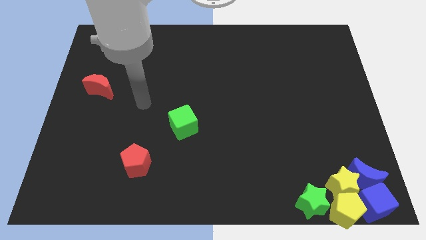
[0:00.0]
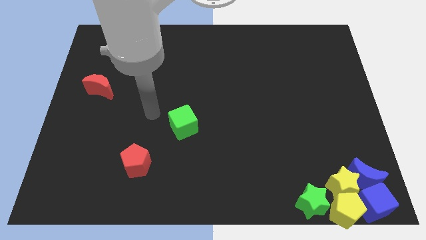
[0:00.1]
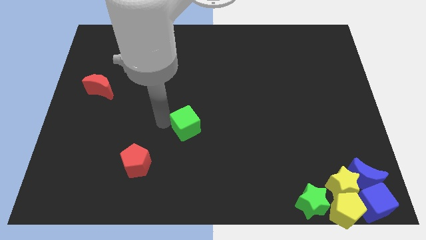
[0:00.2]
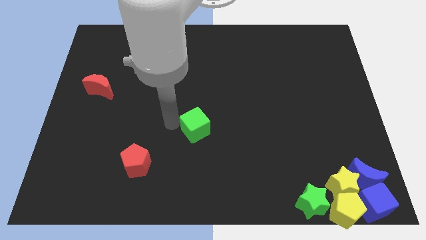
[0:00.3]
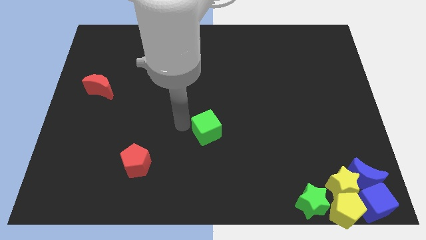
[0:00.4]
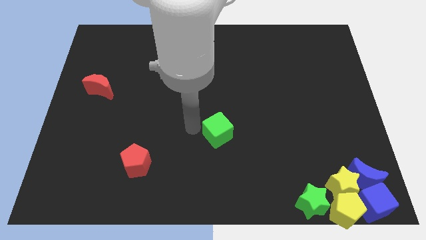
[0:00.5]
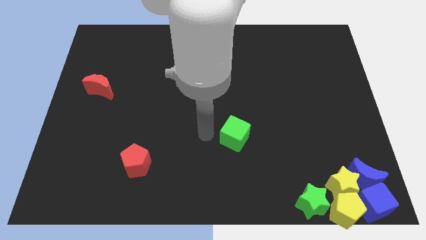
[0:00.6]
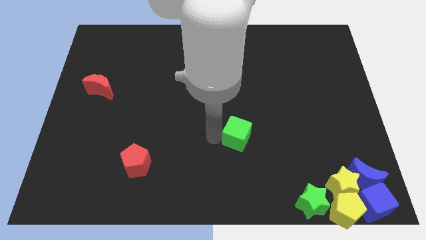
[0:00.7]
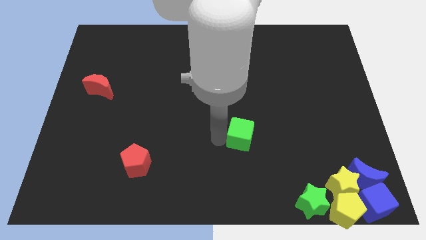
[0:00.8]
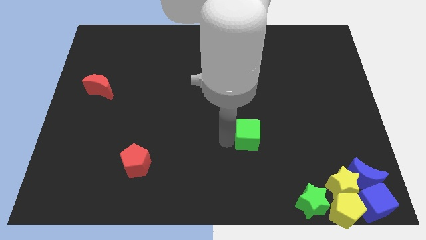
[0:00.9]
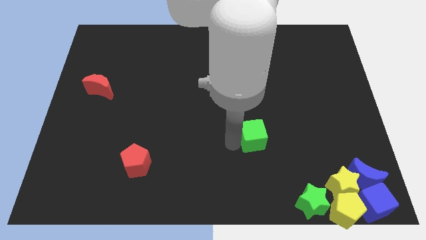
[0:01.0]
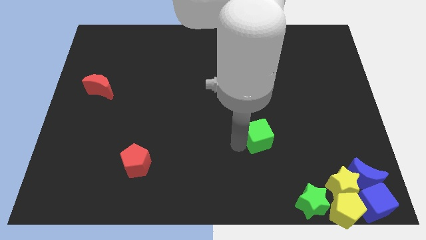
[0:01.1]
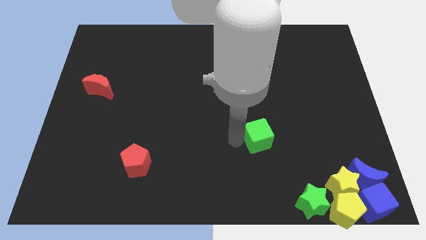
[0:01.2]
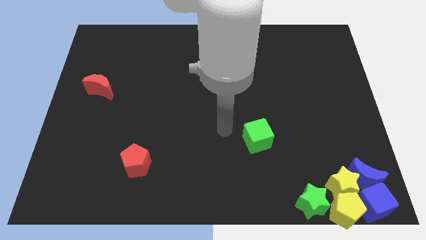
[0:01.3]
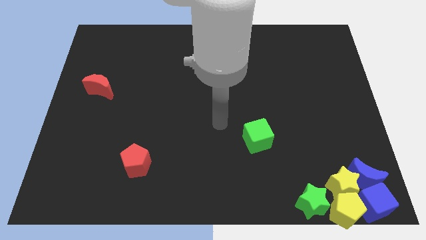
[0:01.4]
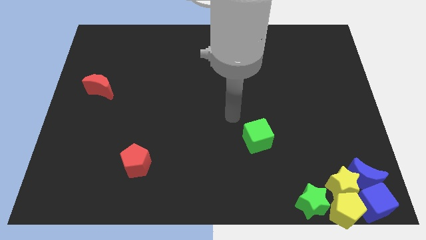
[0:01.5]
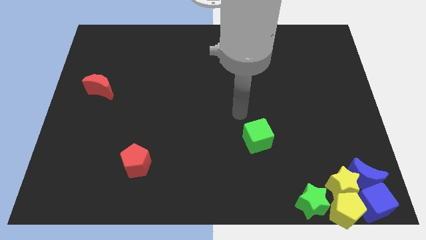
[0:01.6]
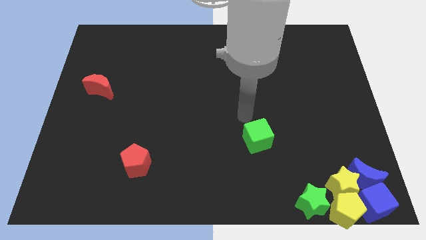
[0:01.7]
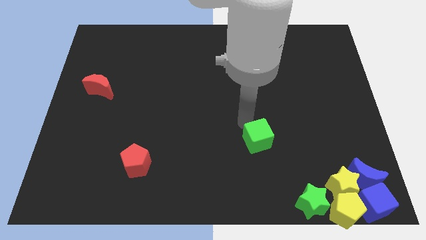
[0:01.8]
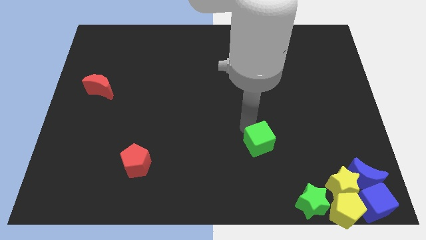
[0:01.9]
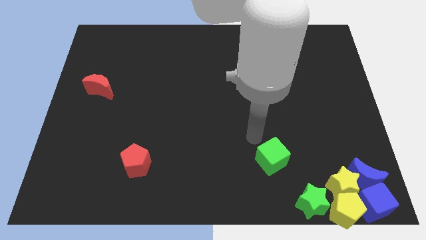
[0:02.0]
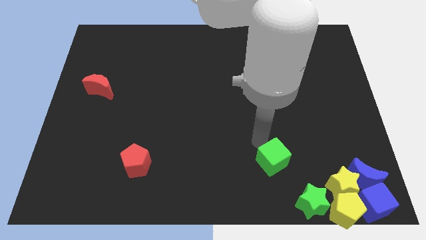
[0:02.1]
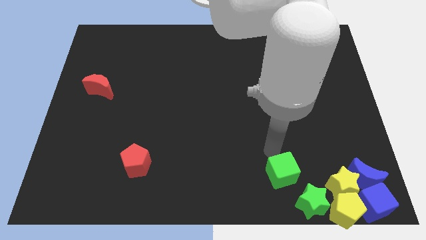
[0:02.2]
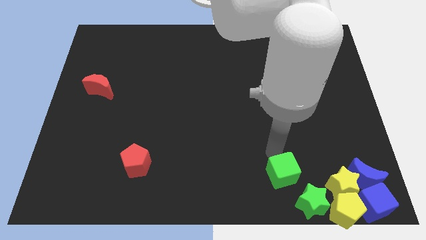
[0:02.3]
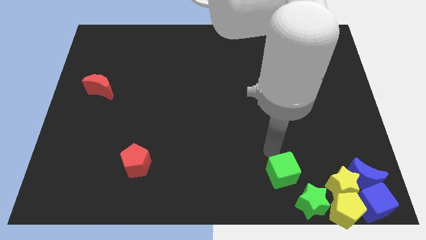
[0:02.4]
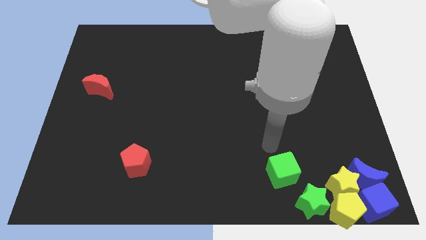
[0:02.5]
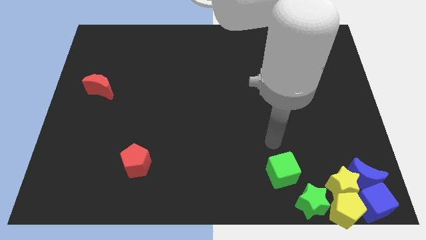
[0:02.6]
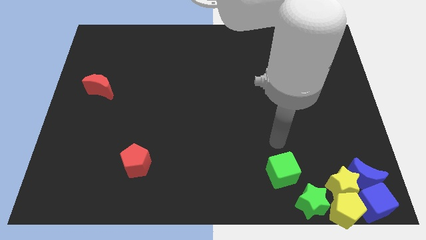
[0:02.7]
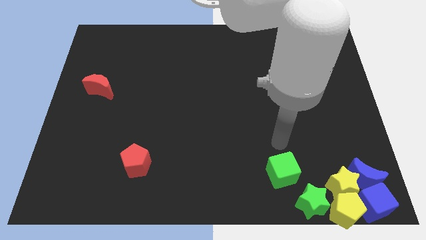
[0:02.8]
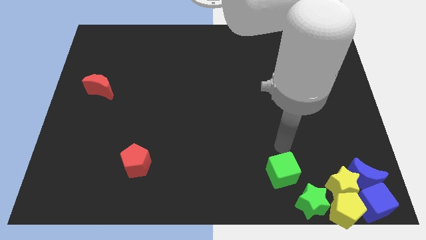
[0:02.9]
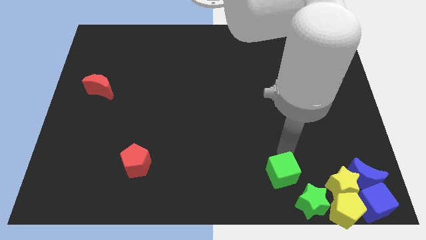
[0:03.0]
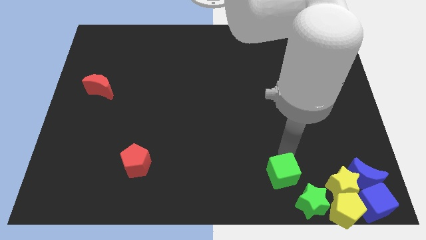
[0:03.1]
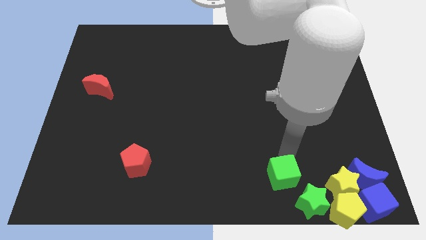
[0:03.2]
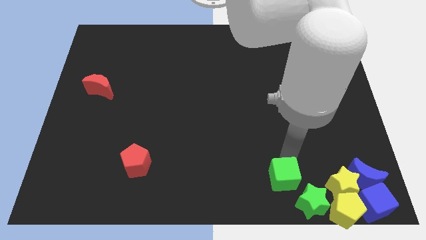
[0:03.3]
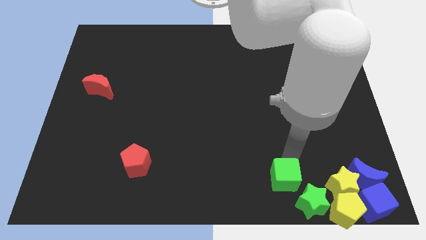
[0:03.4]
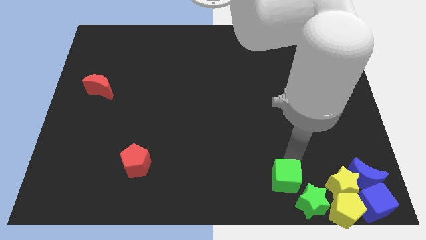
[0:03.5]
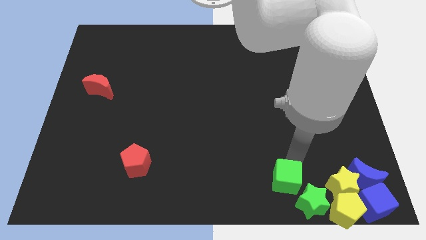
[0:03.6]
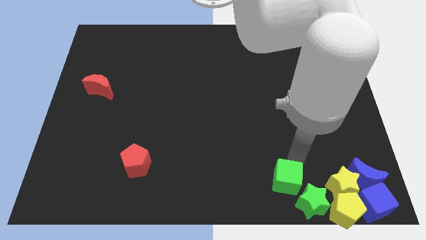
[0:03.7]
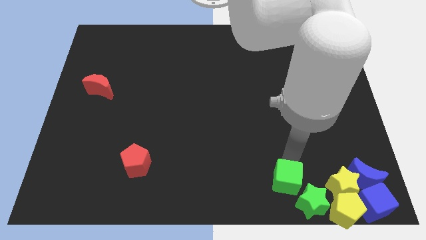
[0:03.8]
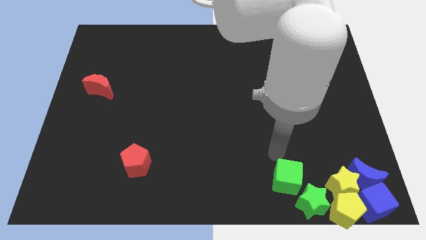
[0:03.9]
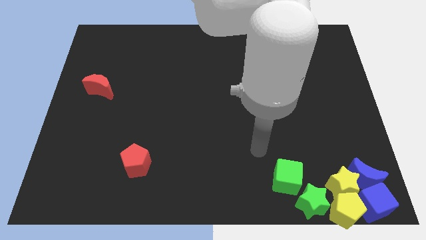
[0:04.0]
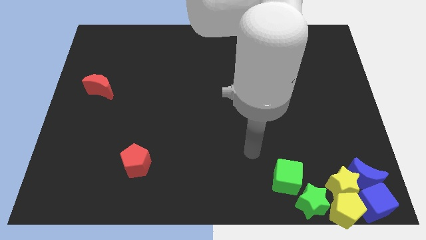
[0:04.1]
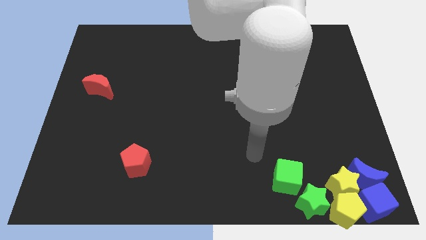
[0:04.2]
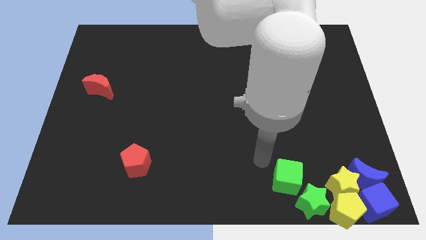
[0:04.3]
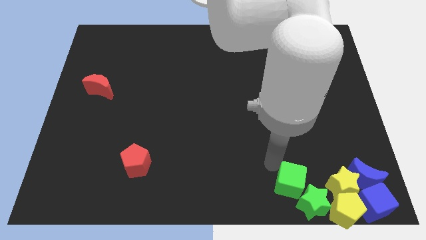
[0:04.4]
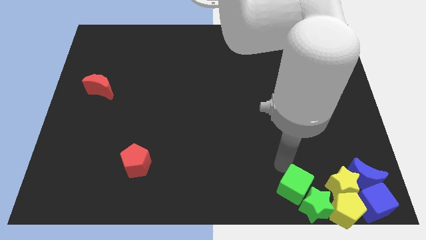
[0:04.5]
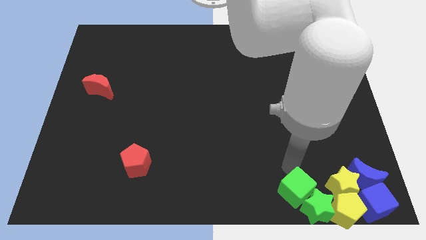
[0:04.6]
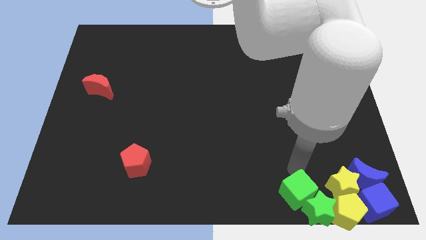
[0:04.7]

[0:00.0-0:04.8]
push the green cube into the green star

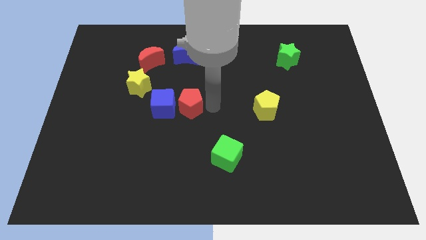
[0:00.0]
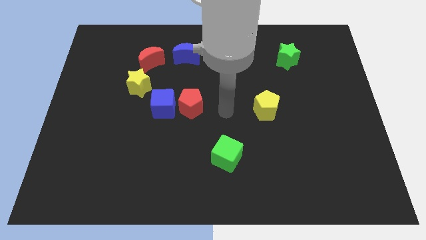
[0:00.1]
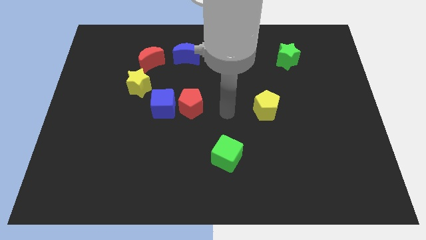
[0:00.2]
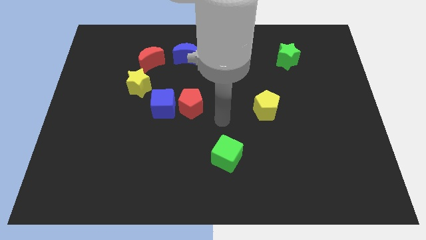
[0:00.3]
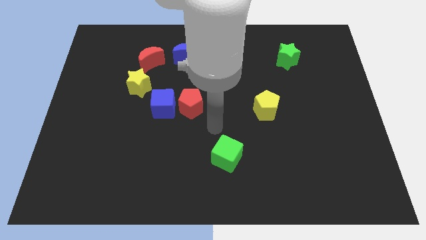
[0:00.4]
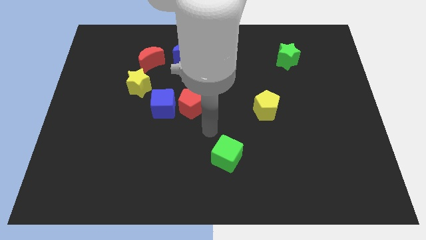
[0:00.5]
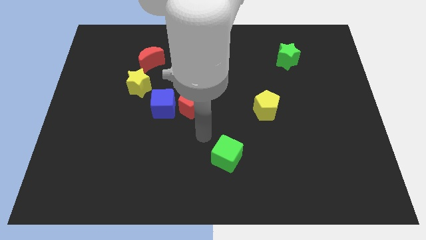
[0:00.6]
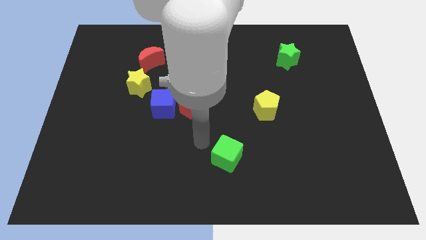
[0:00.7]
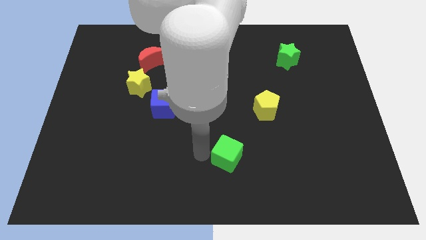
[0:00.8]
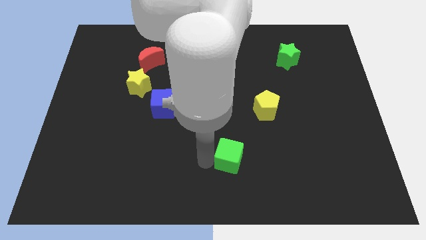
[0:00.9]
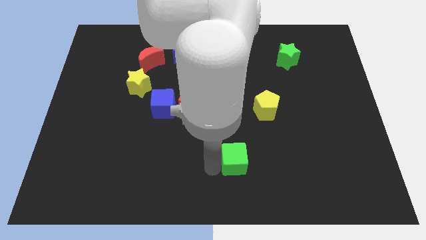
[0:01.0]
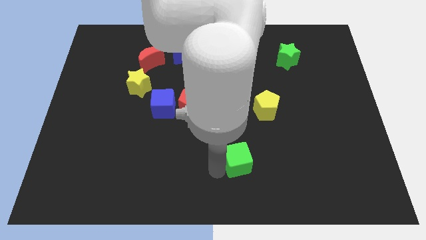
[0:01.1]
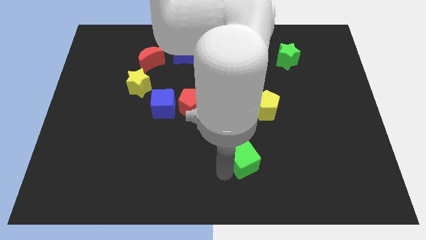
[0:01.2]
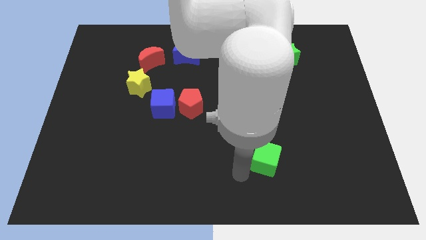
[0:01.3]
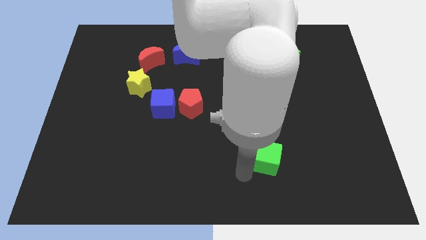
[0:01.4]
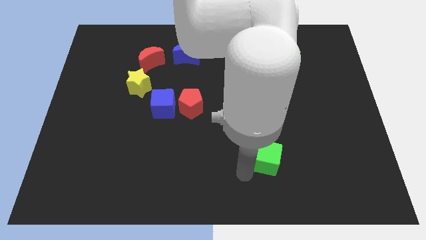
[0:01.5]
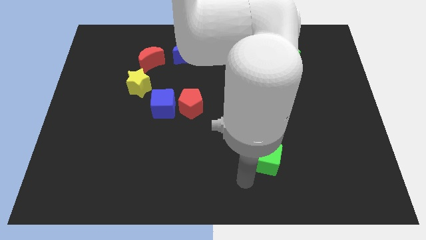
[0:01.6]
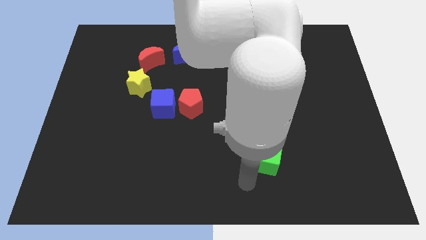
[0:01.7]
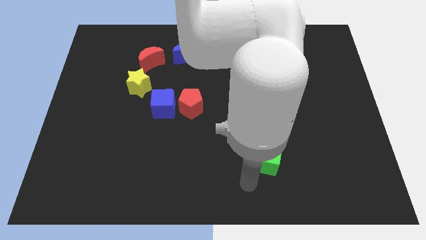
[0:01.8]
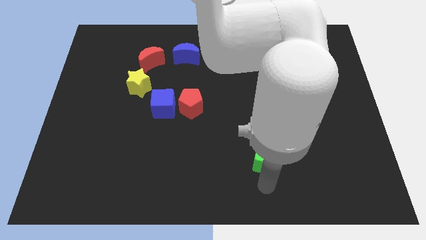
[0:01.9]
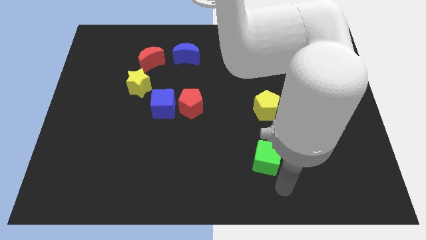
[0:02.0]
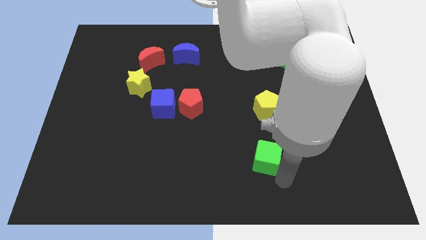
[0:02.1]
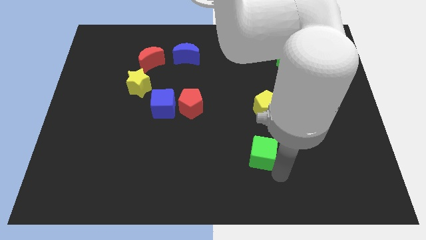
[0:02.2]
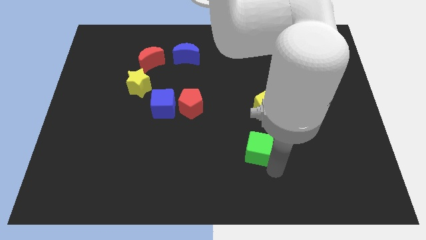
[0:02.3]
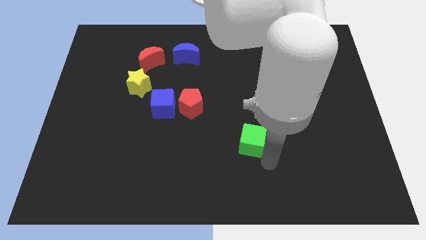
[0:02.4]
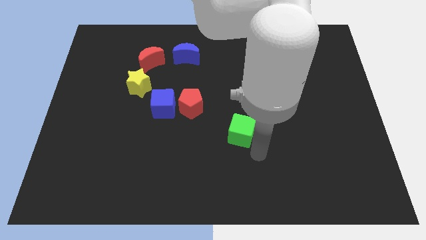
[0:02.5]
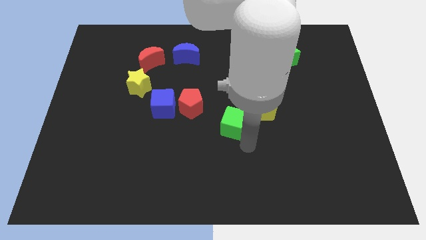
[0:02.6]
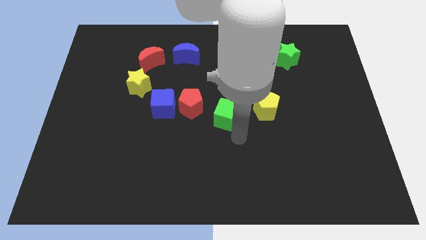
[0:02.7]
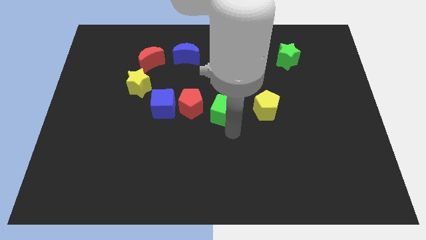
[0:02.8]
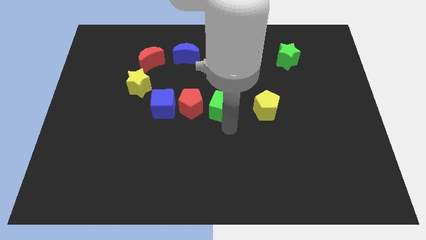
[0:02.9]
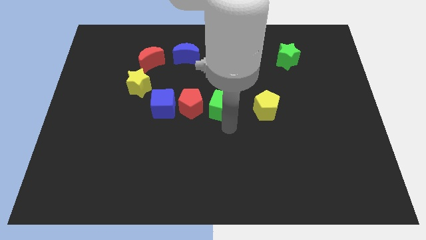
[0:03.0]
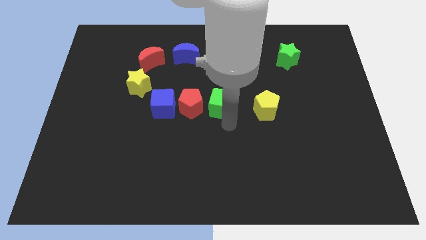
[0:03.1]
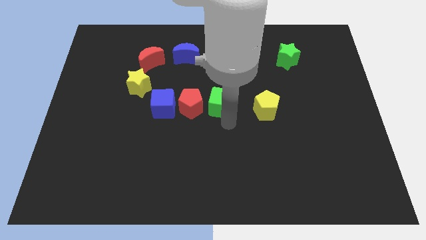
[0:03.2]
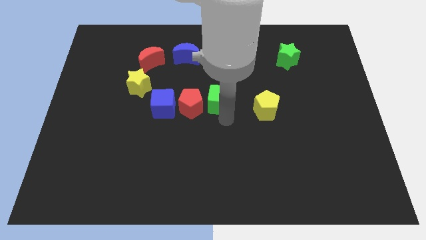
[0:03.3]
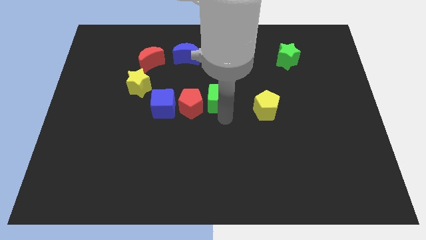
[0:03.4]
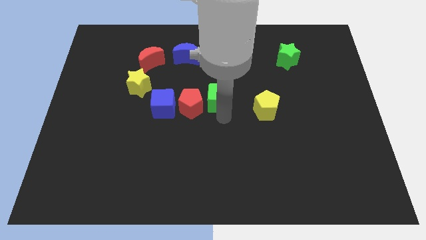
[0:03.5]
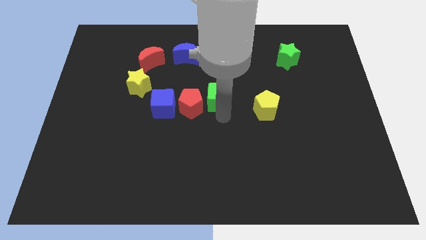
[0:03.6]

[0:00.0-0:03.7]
place the green cube between the yellow pentagon and red pentagon

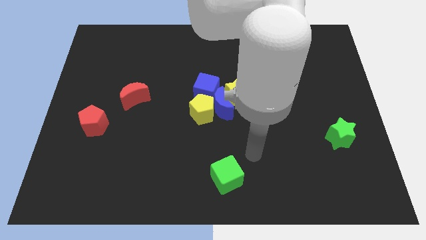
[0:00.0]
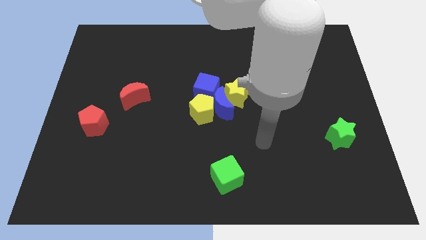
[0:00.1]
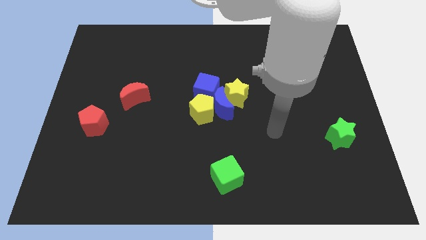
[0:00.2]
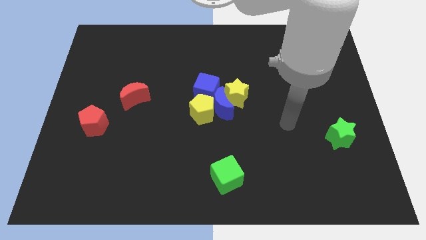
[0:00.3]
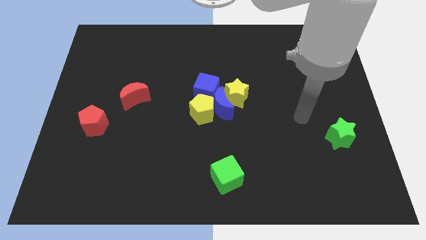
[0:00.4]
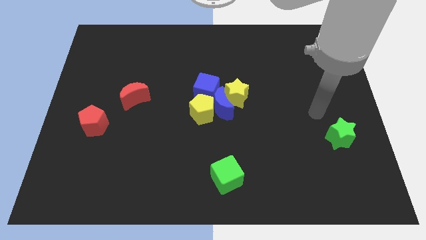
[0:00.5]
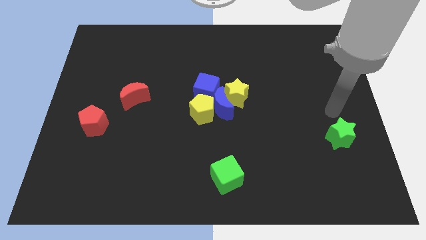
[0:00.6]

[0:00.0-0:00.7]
move the arm towards the top of the green star
